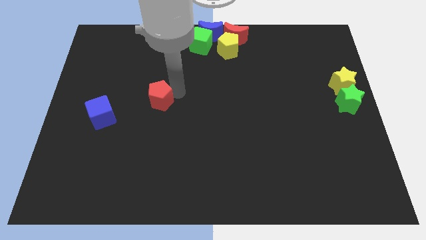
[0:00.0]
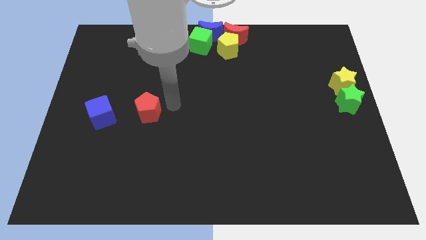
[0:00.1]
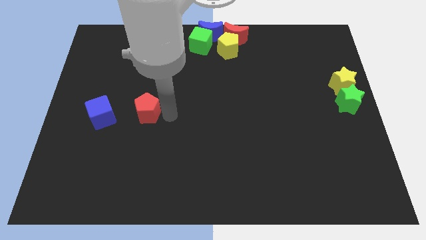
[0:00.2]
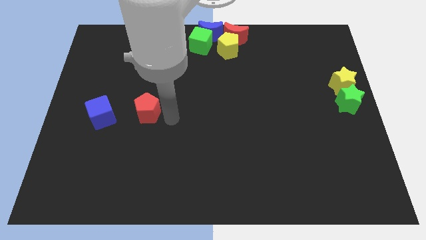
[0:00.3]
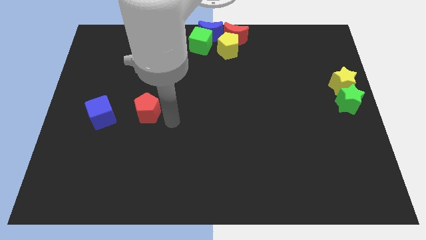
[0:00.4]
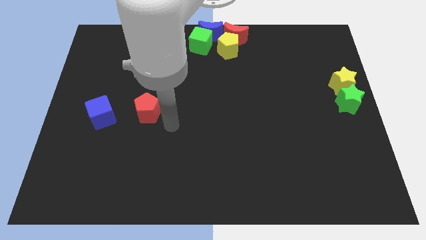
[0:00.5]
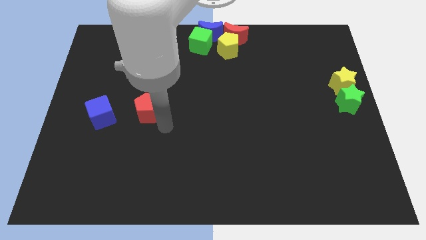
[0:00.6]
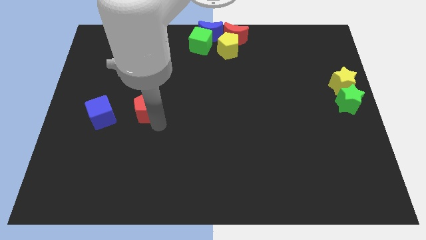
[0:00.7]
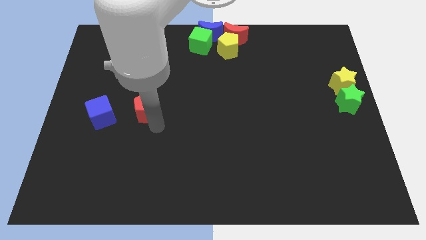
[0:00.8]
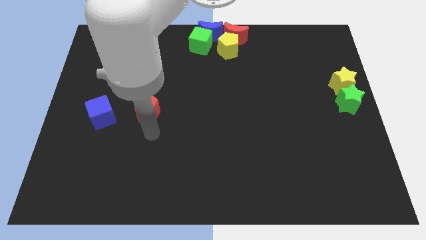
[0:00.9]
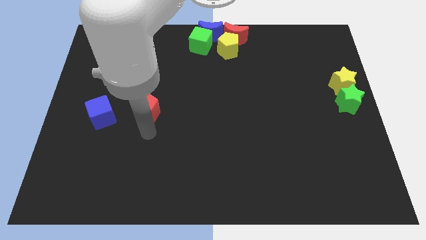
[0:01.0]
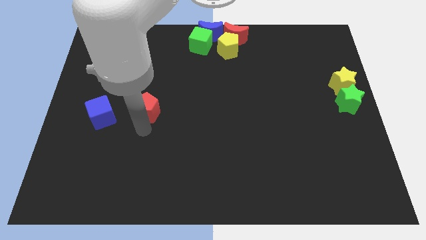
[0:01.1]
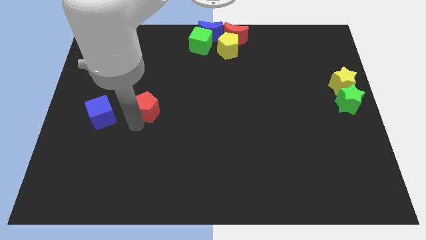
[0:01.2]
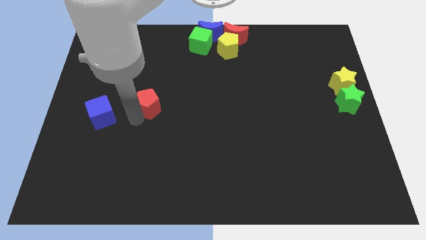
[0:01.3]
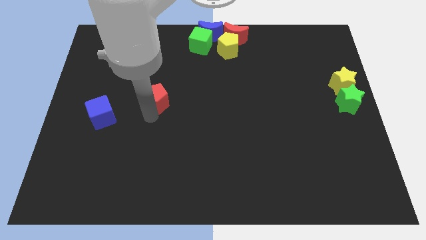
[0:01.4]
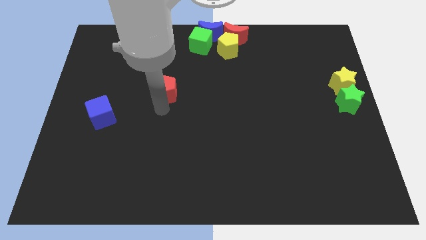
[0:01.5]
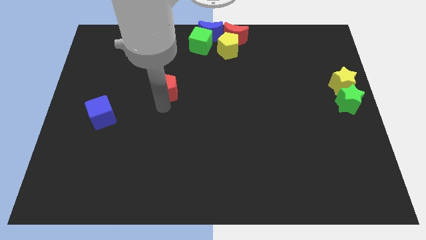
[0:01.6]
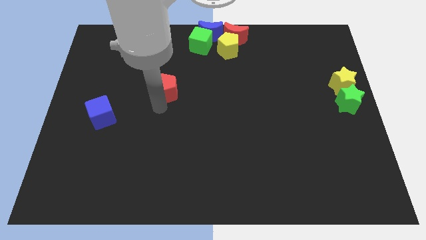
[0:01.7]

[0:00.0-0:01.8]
drag the red pentagon diagonally on the bottom left side of the green cube

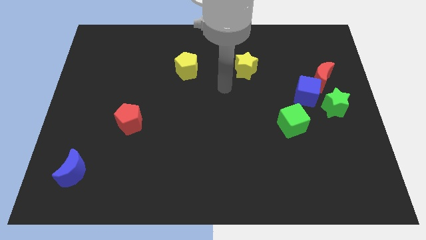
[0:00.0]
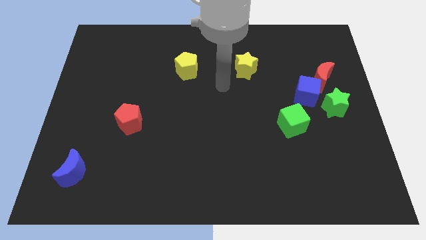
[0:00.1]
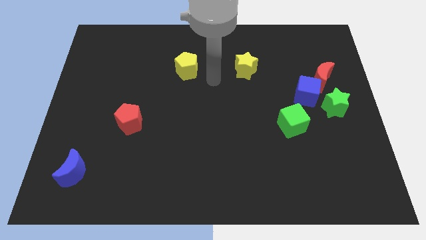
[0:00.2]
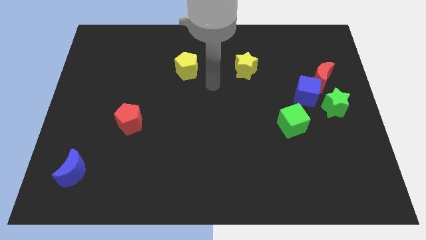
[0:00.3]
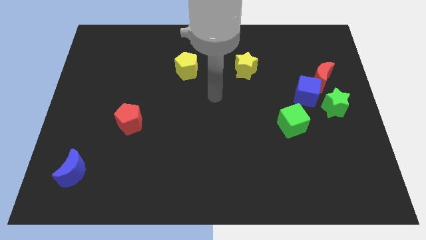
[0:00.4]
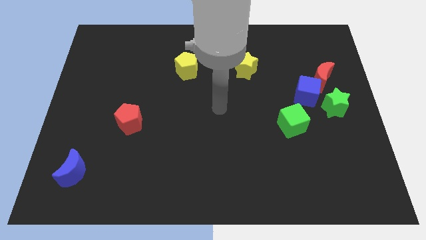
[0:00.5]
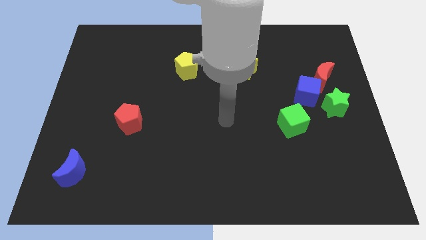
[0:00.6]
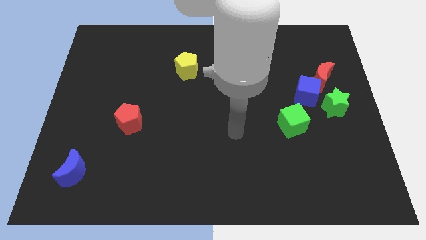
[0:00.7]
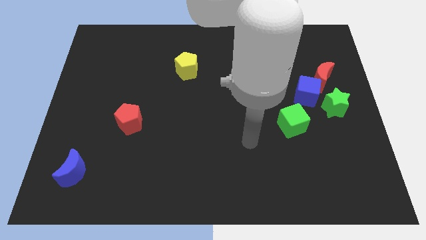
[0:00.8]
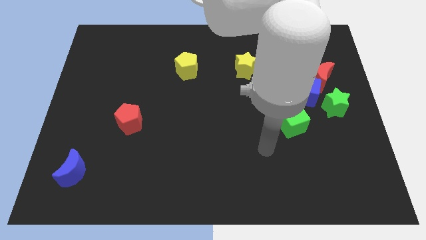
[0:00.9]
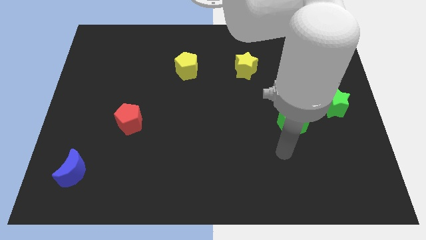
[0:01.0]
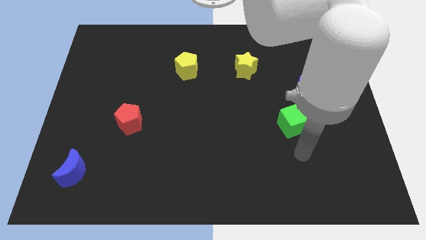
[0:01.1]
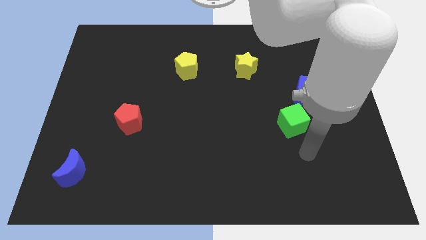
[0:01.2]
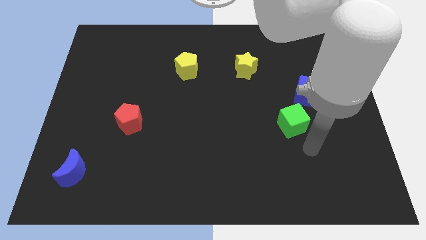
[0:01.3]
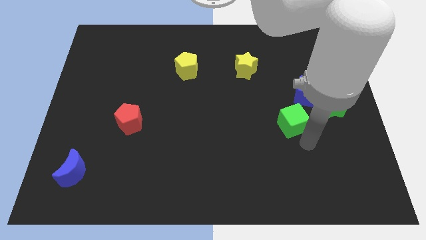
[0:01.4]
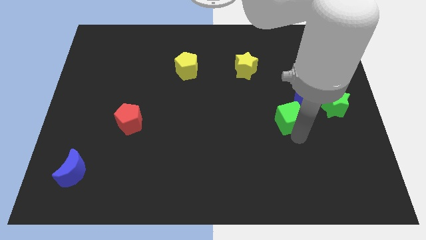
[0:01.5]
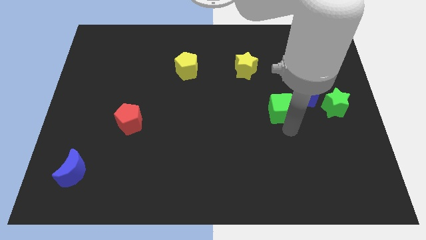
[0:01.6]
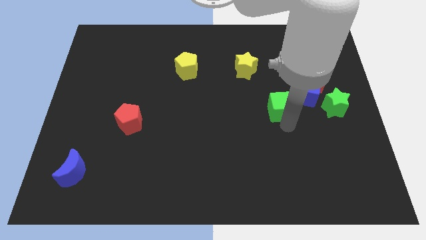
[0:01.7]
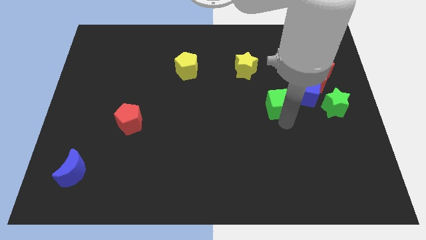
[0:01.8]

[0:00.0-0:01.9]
move the green cube to the top of the board

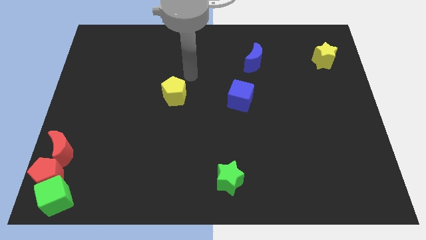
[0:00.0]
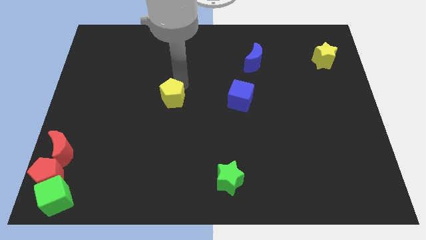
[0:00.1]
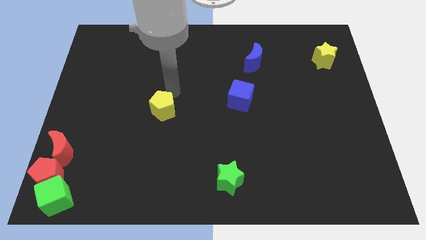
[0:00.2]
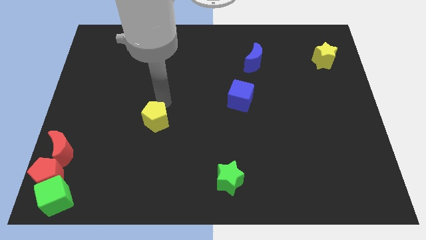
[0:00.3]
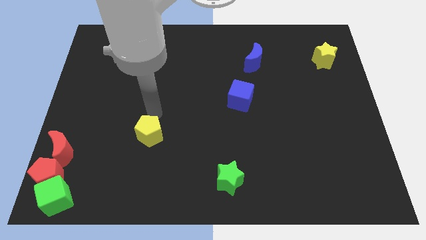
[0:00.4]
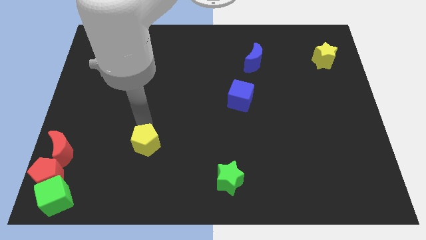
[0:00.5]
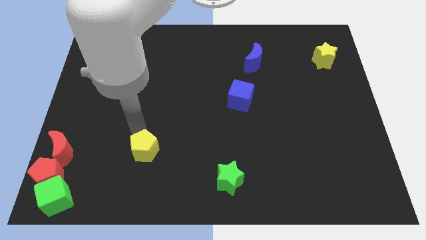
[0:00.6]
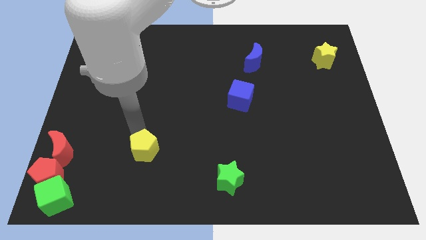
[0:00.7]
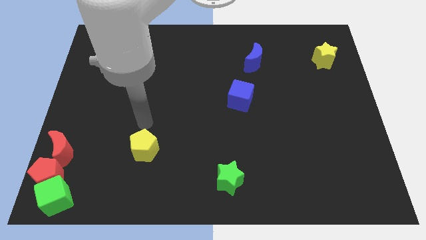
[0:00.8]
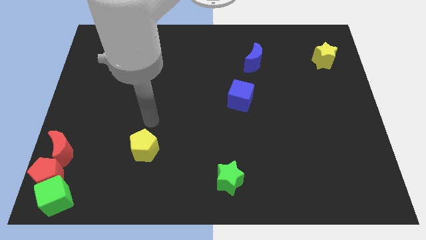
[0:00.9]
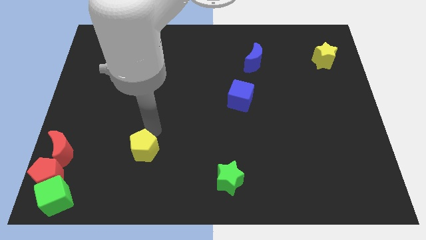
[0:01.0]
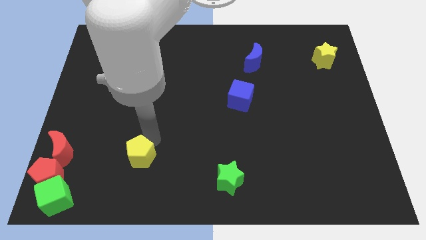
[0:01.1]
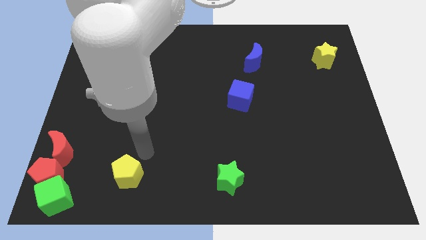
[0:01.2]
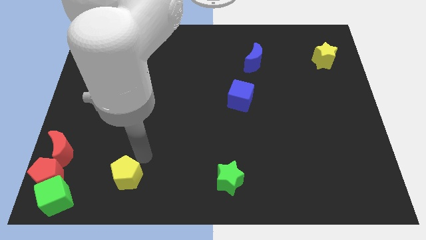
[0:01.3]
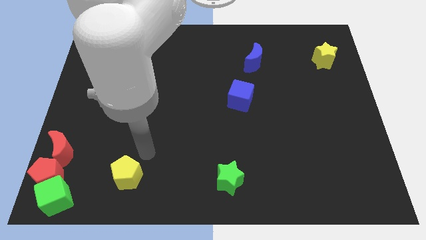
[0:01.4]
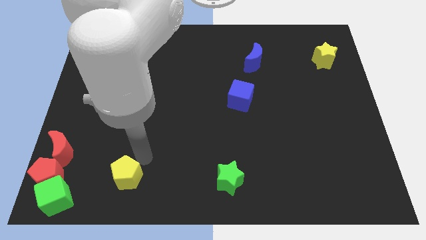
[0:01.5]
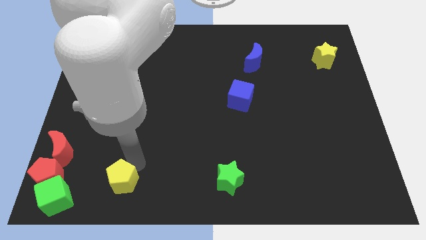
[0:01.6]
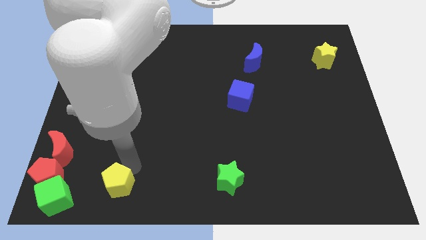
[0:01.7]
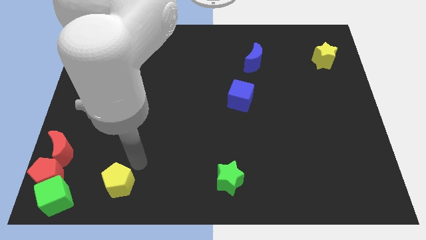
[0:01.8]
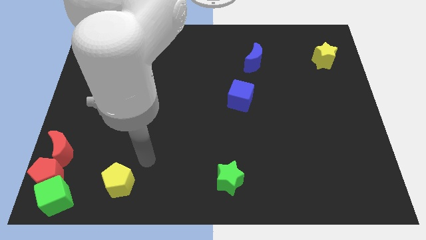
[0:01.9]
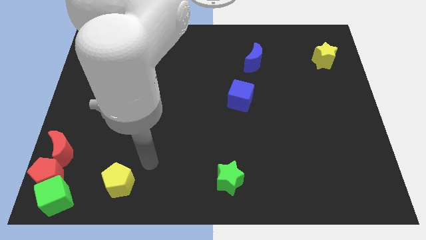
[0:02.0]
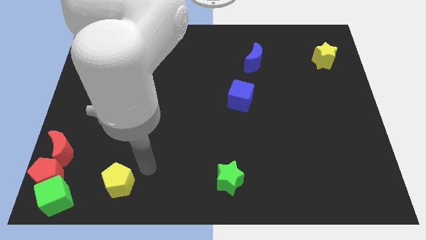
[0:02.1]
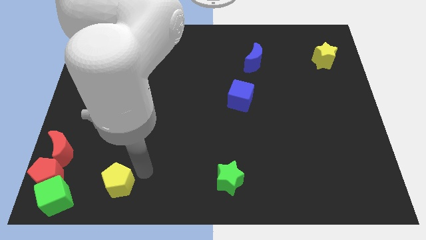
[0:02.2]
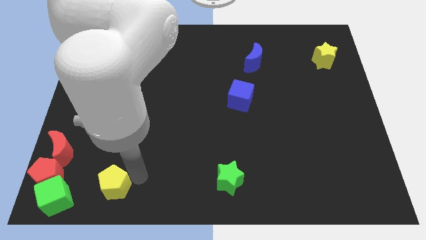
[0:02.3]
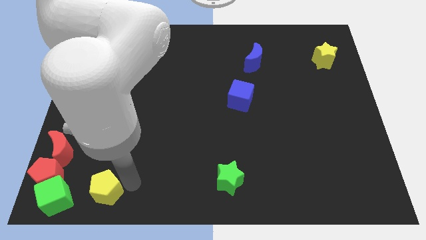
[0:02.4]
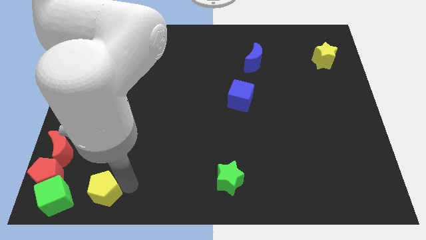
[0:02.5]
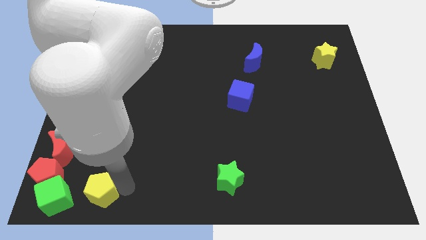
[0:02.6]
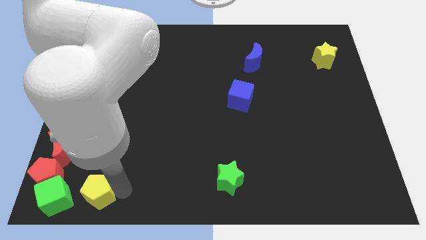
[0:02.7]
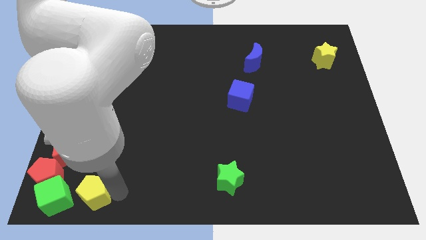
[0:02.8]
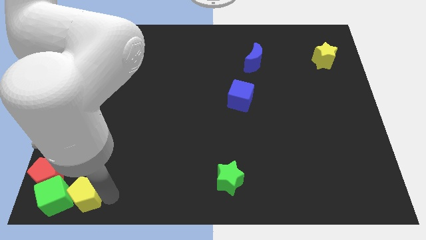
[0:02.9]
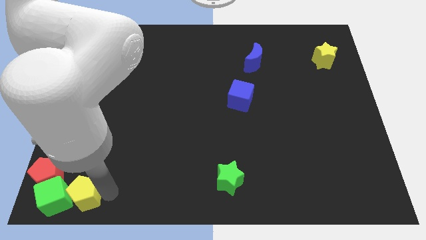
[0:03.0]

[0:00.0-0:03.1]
push the yellow pentagon into the right side of the green cube

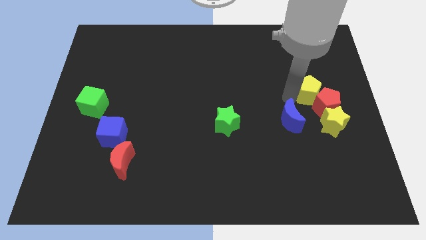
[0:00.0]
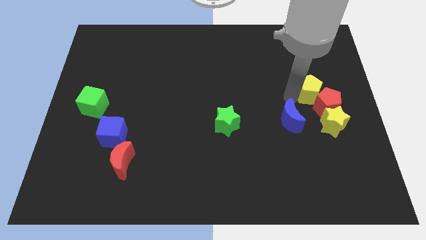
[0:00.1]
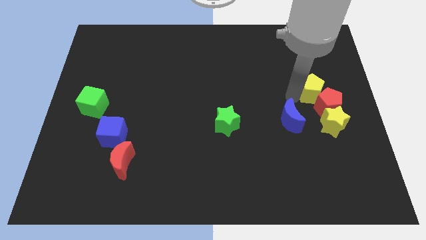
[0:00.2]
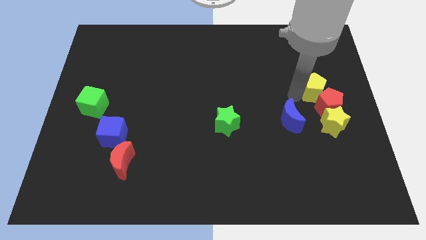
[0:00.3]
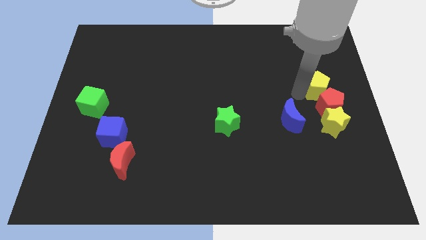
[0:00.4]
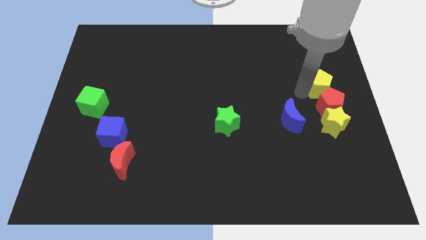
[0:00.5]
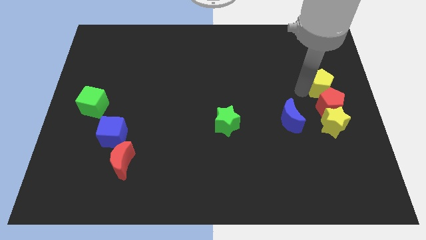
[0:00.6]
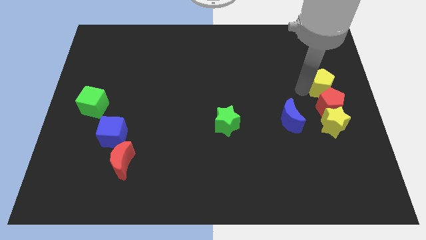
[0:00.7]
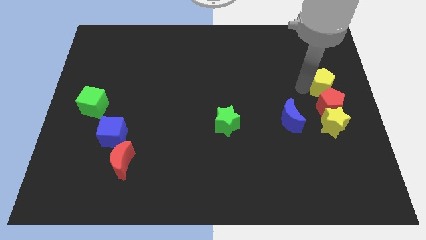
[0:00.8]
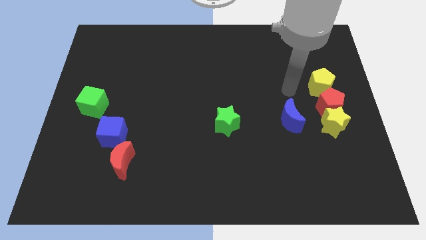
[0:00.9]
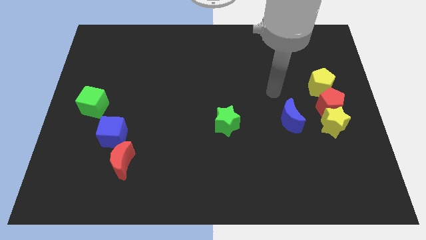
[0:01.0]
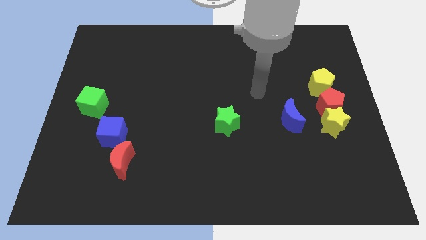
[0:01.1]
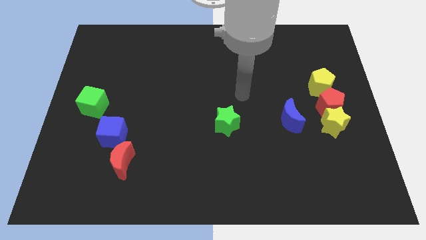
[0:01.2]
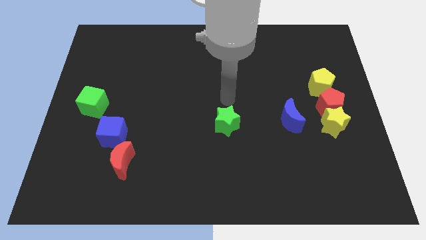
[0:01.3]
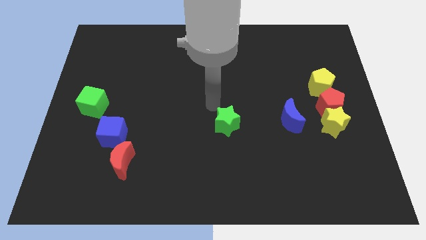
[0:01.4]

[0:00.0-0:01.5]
move the yellow pentagon above the red pentagon

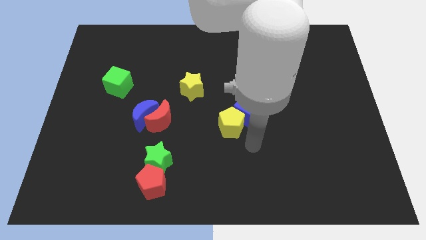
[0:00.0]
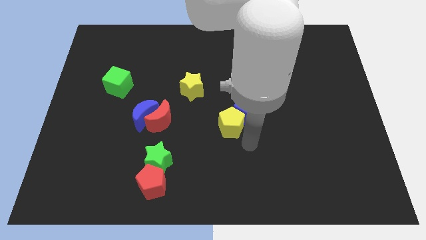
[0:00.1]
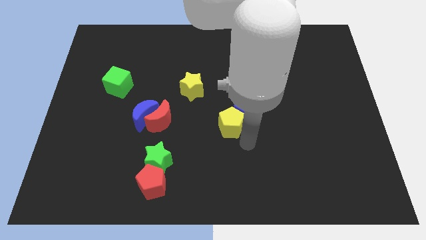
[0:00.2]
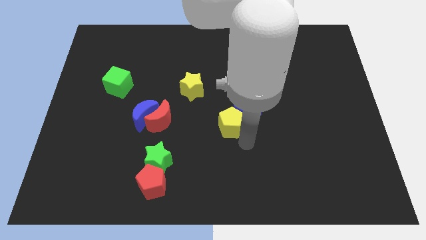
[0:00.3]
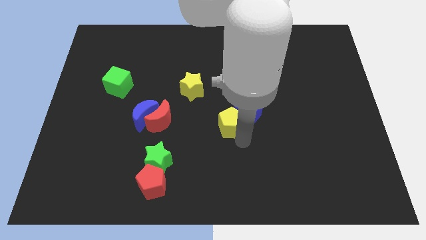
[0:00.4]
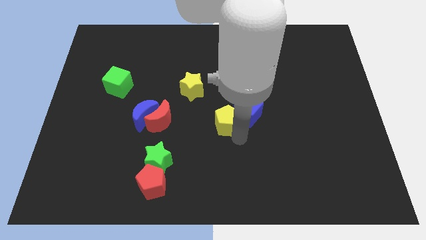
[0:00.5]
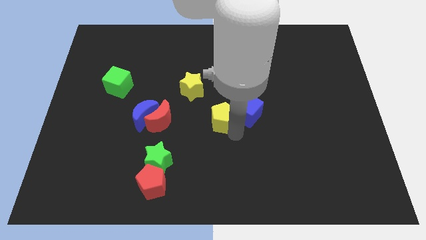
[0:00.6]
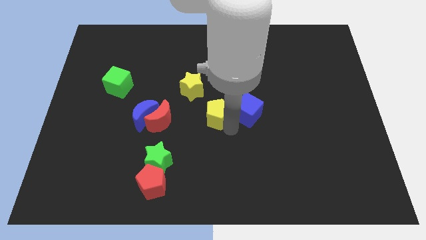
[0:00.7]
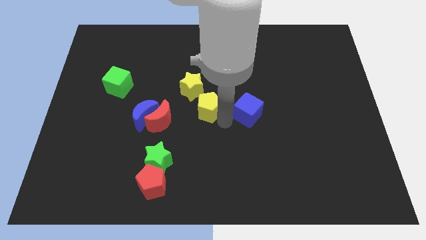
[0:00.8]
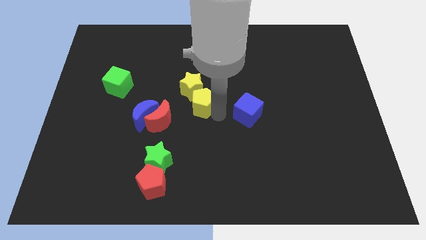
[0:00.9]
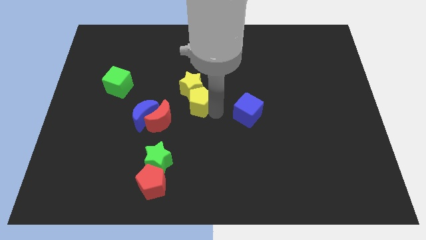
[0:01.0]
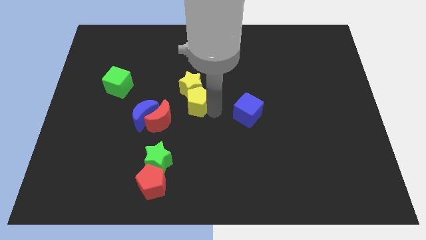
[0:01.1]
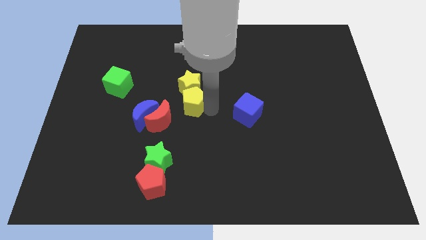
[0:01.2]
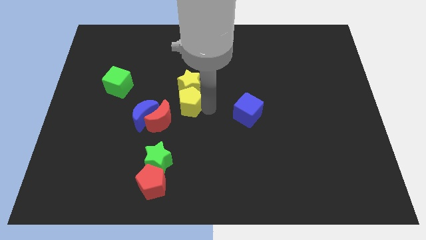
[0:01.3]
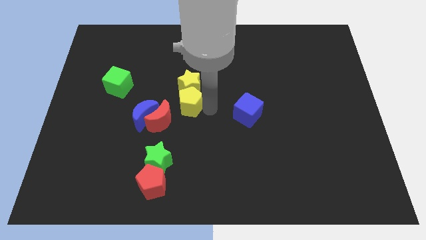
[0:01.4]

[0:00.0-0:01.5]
push the yellow pentagon into the yellow star
